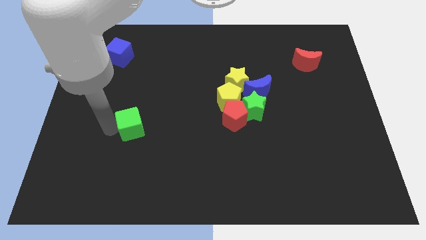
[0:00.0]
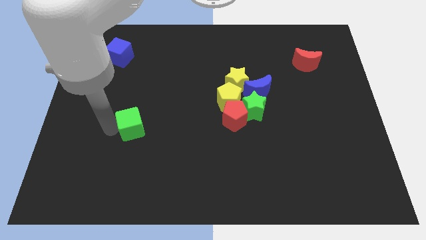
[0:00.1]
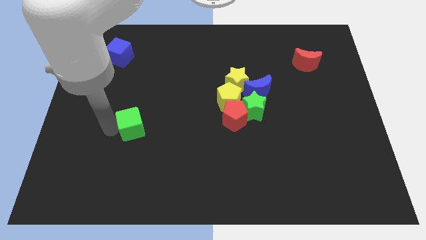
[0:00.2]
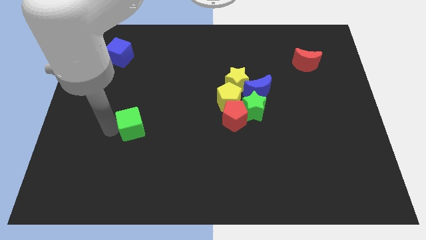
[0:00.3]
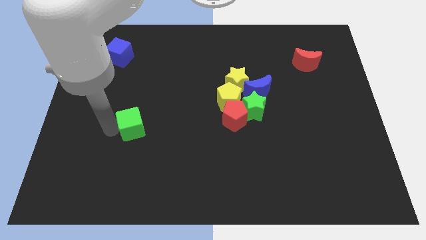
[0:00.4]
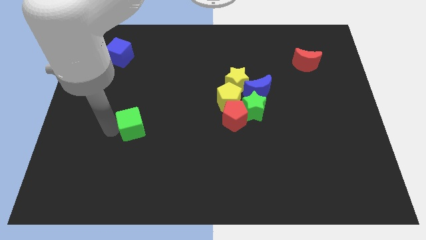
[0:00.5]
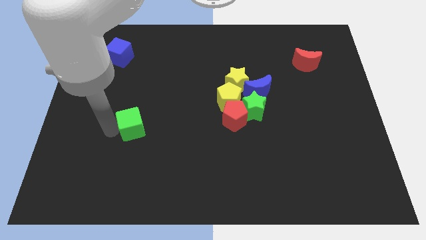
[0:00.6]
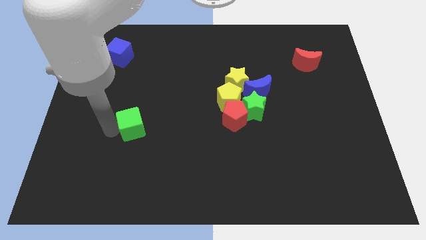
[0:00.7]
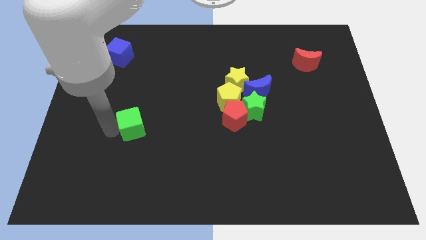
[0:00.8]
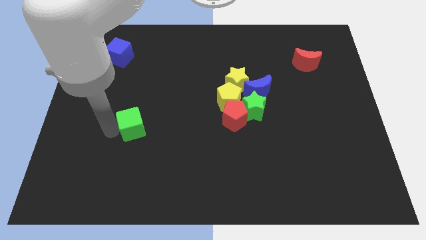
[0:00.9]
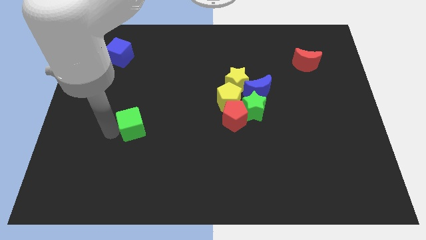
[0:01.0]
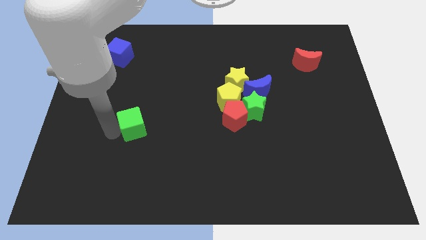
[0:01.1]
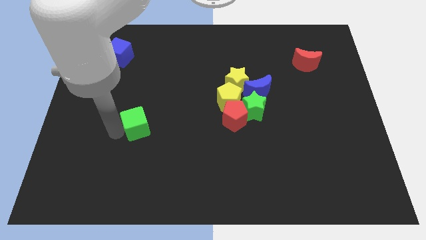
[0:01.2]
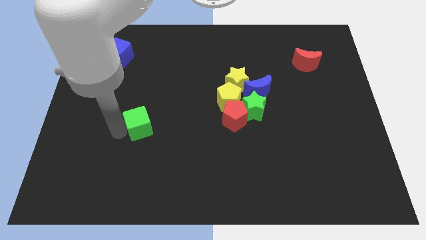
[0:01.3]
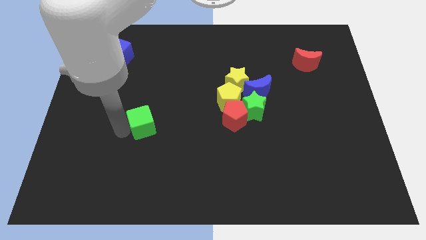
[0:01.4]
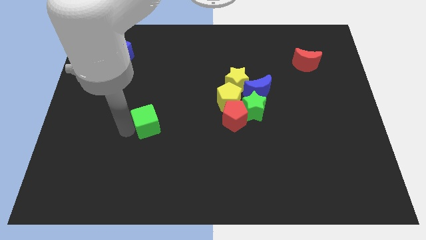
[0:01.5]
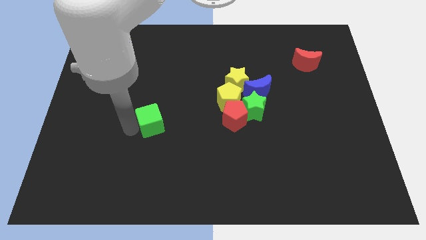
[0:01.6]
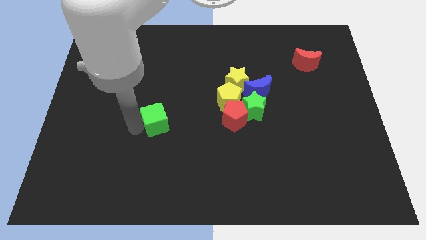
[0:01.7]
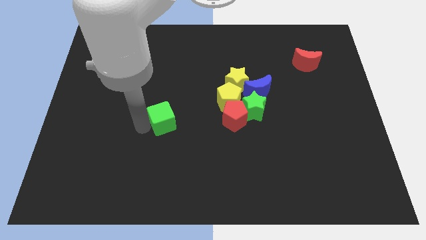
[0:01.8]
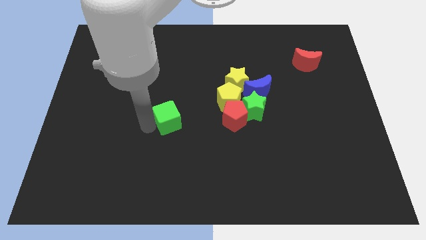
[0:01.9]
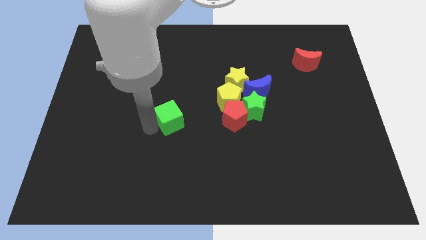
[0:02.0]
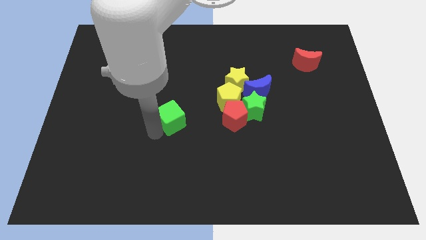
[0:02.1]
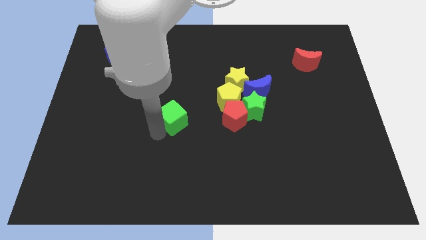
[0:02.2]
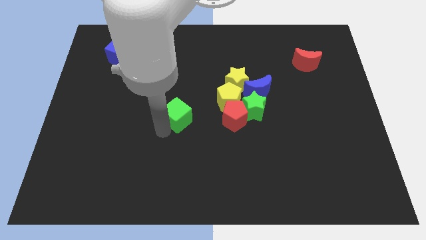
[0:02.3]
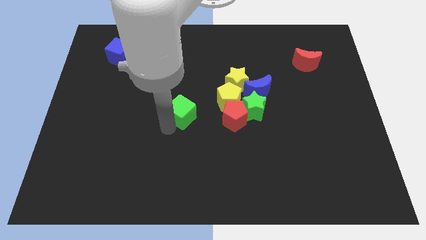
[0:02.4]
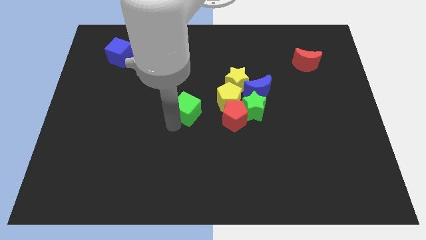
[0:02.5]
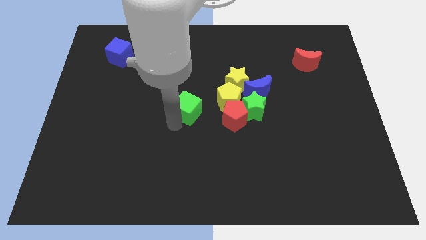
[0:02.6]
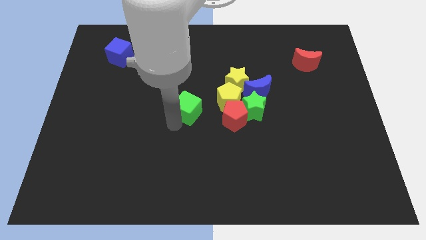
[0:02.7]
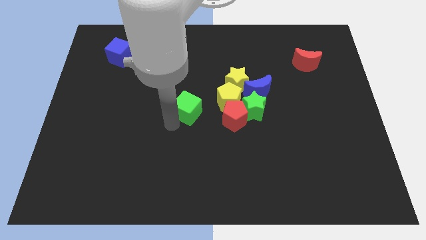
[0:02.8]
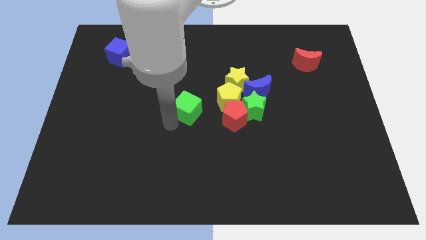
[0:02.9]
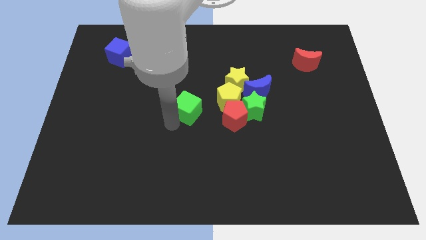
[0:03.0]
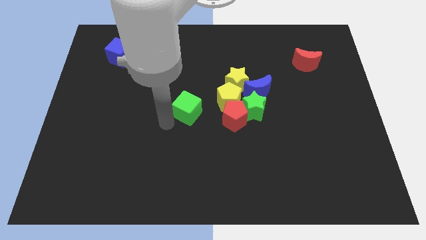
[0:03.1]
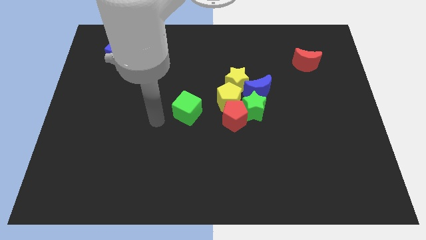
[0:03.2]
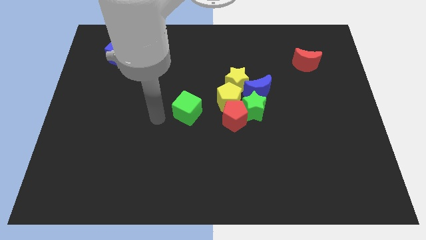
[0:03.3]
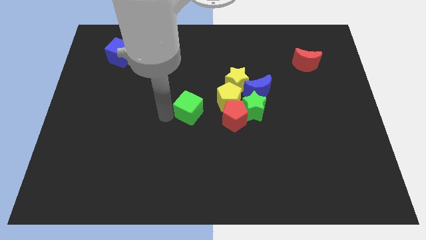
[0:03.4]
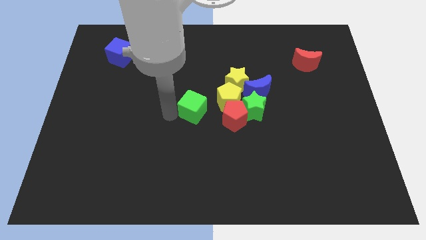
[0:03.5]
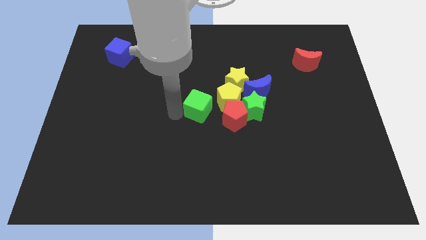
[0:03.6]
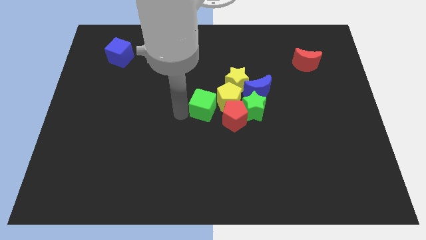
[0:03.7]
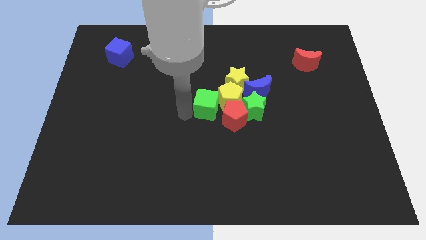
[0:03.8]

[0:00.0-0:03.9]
move the green cube into yellow pentagon

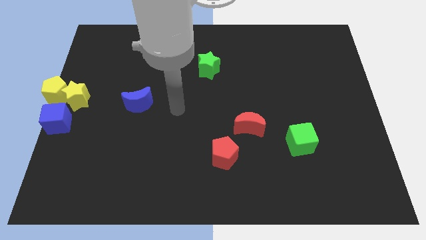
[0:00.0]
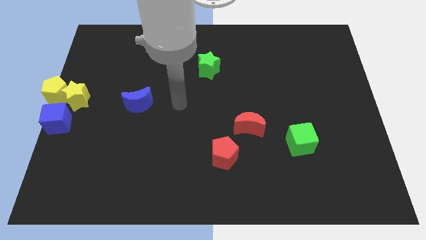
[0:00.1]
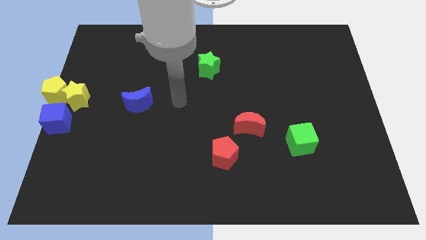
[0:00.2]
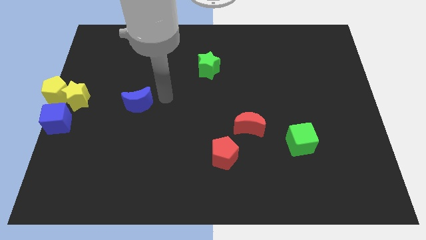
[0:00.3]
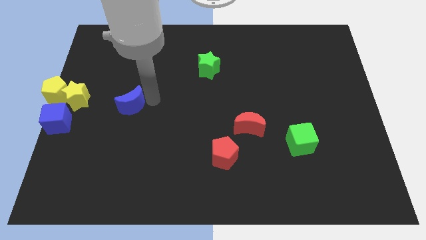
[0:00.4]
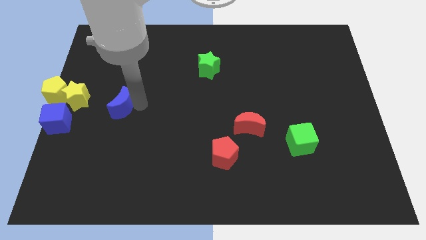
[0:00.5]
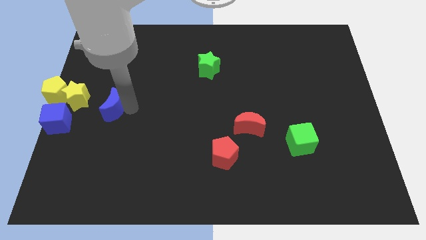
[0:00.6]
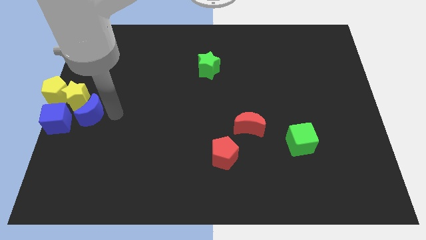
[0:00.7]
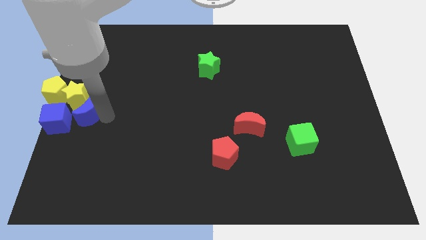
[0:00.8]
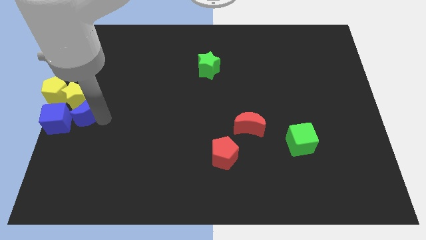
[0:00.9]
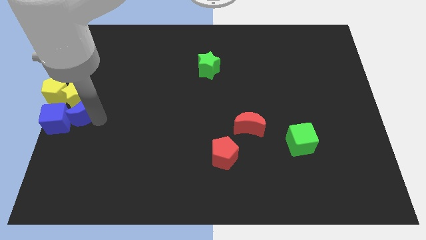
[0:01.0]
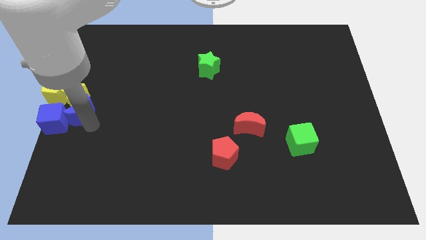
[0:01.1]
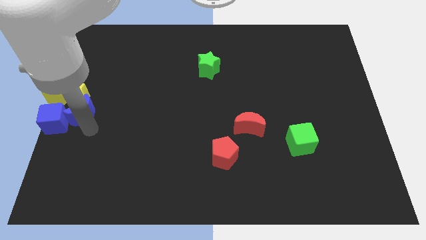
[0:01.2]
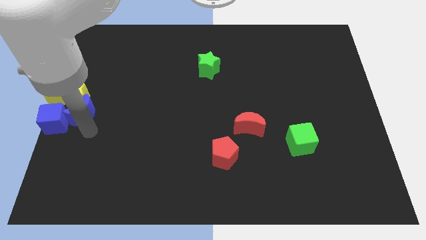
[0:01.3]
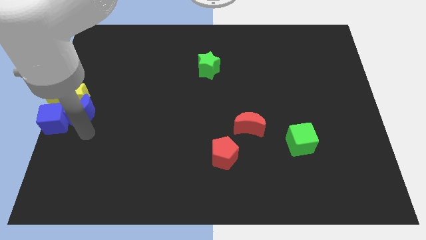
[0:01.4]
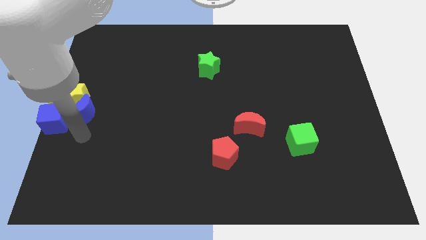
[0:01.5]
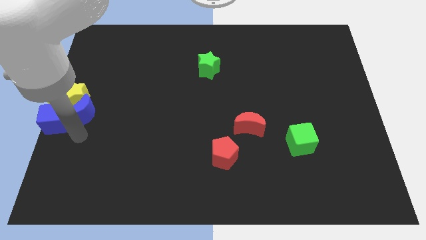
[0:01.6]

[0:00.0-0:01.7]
push the blue crescent into the blue cube

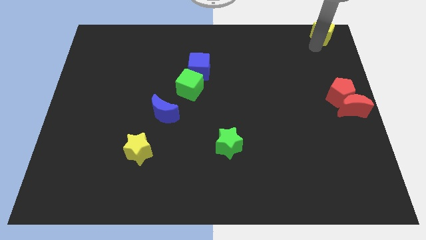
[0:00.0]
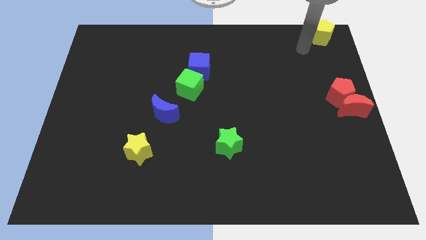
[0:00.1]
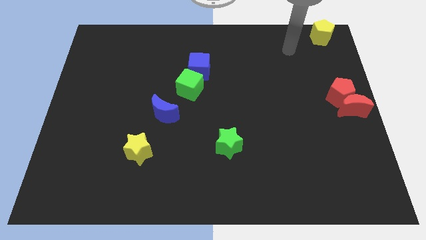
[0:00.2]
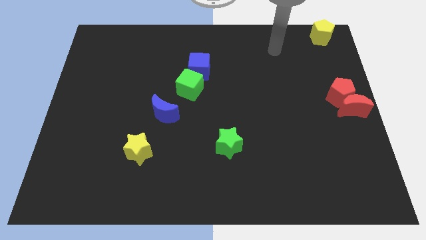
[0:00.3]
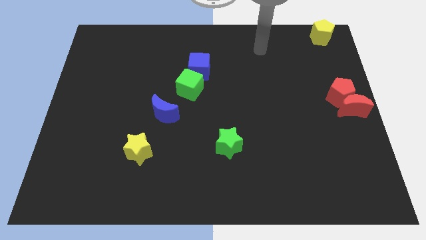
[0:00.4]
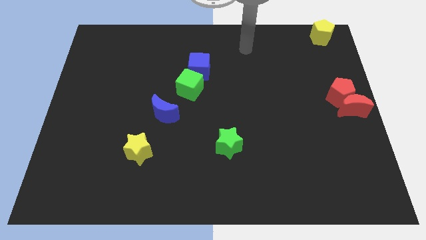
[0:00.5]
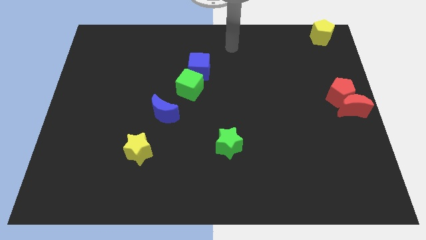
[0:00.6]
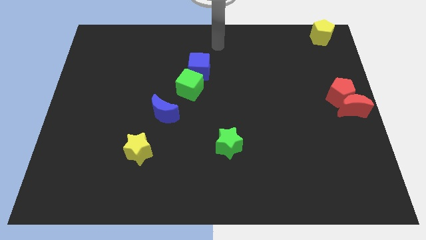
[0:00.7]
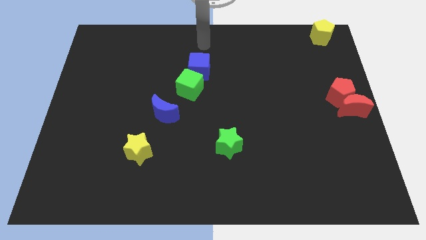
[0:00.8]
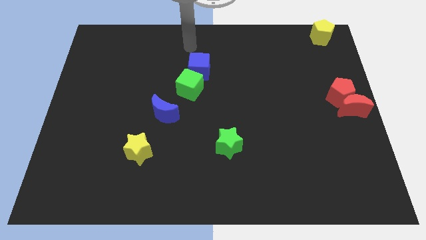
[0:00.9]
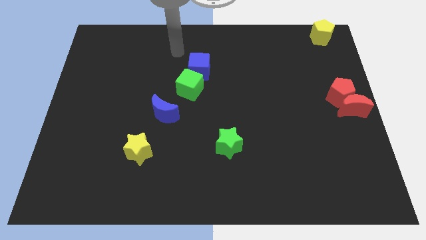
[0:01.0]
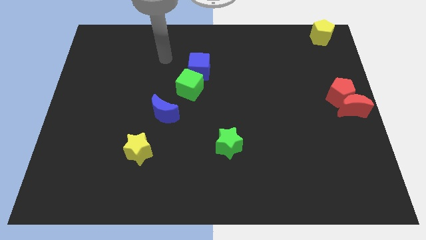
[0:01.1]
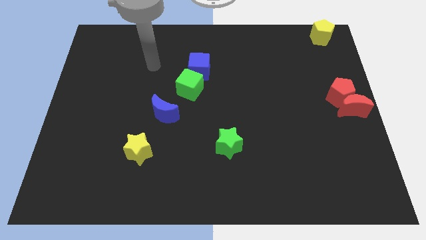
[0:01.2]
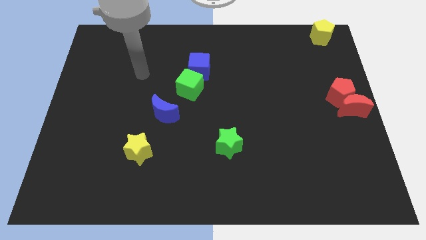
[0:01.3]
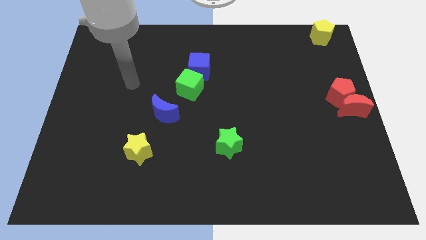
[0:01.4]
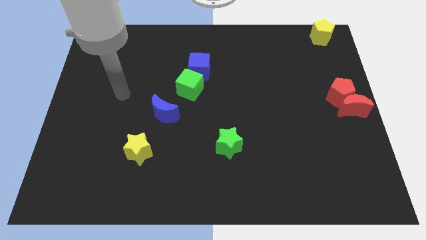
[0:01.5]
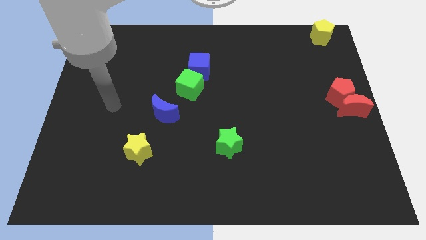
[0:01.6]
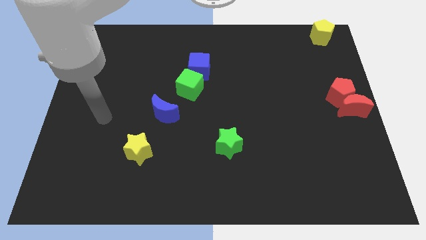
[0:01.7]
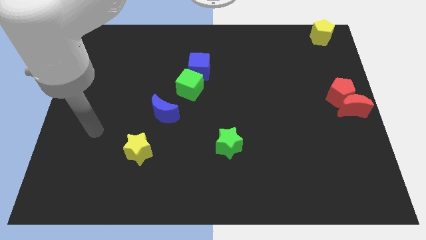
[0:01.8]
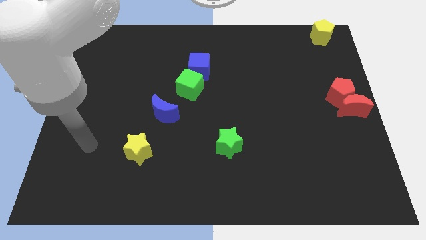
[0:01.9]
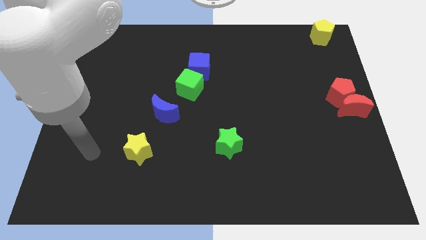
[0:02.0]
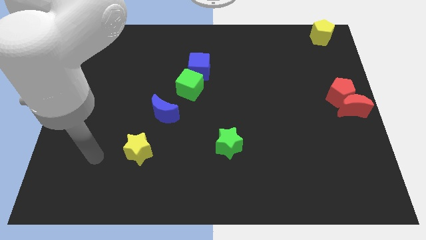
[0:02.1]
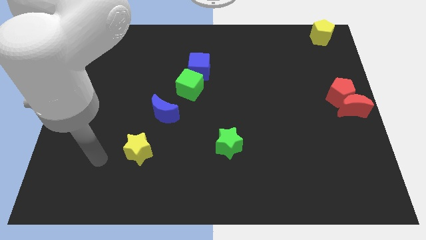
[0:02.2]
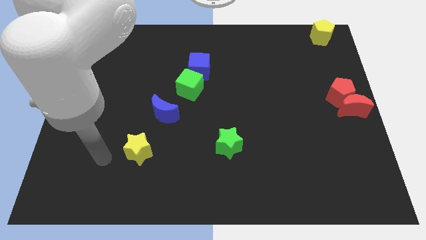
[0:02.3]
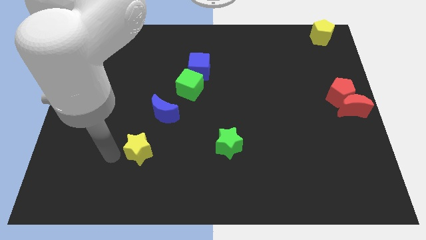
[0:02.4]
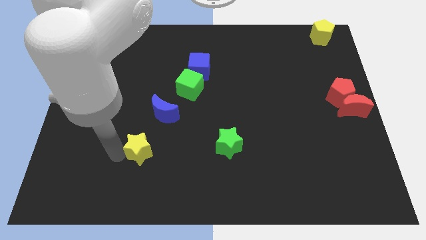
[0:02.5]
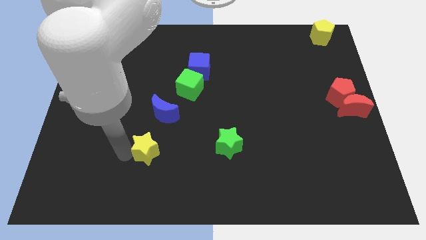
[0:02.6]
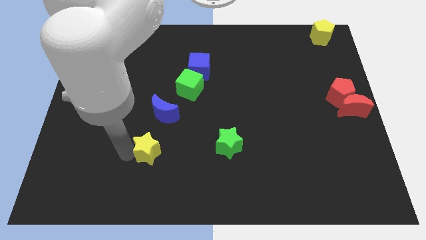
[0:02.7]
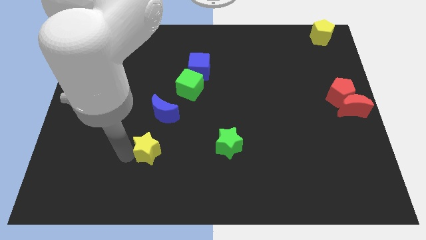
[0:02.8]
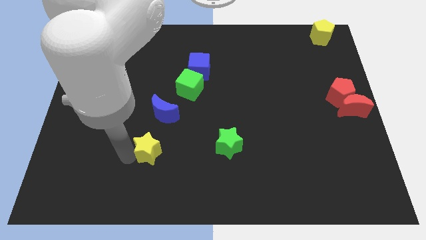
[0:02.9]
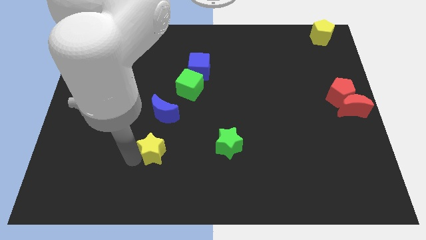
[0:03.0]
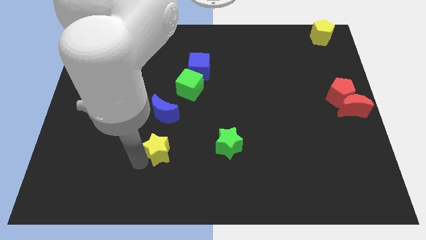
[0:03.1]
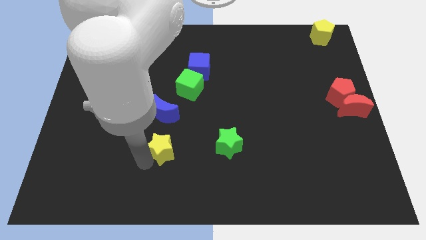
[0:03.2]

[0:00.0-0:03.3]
touch the bottom of yellow star
